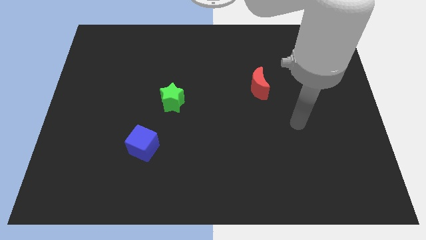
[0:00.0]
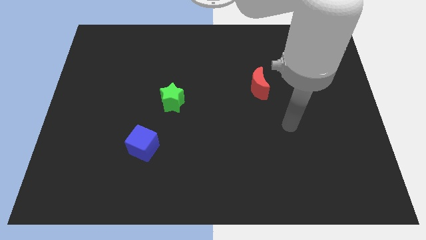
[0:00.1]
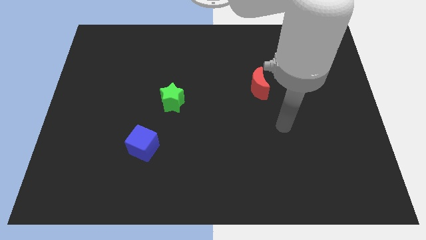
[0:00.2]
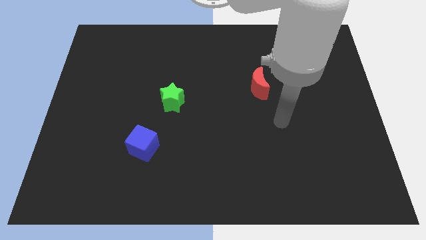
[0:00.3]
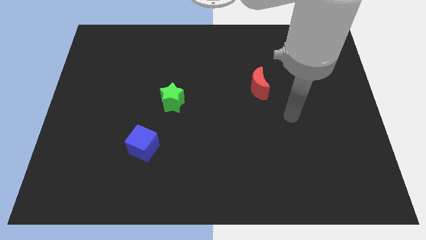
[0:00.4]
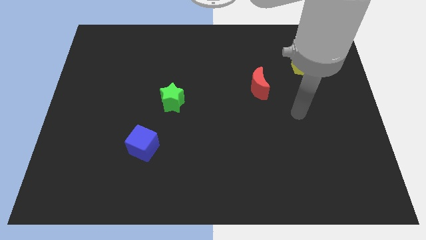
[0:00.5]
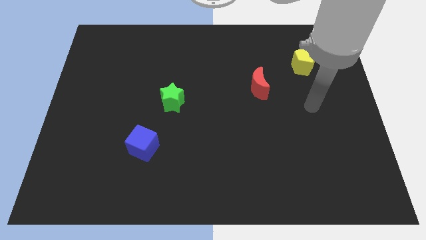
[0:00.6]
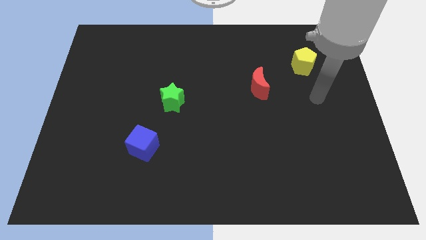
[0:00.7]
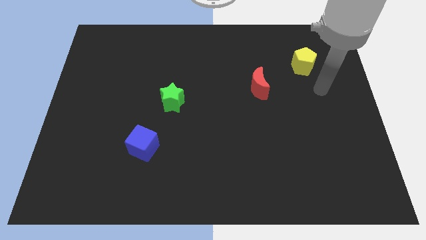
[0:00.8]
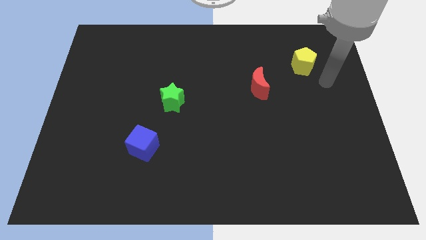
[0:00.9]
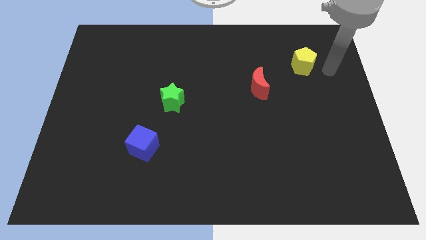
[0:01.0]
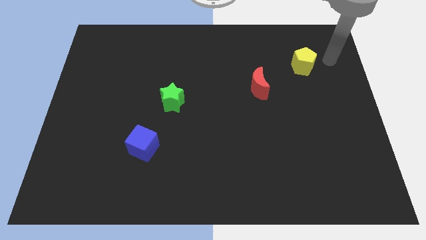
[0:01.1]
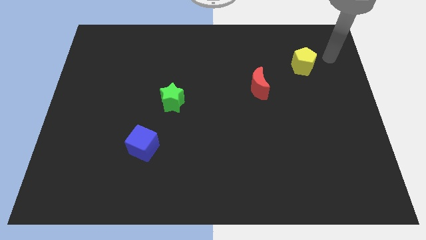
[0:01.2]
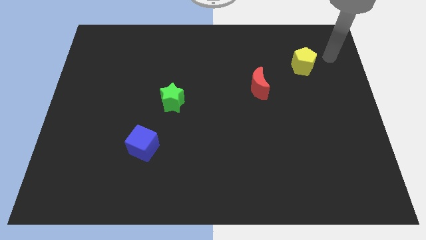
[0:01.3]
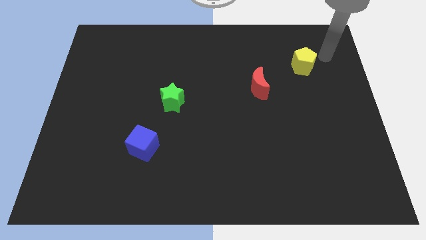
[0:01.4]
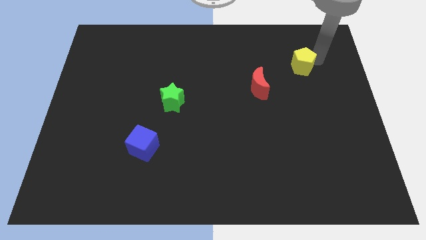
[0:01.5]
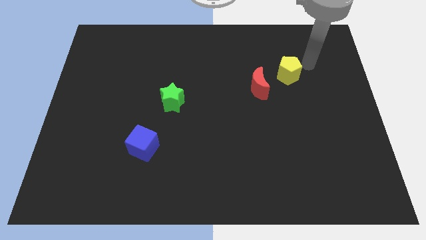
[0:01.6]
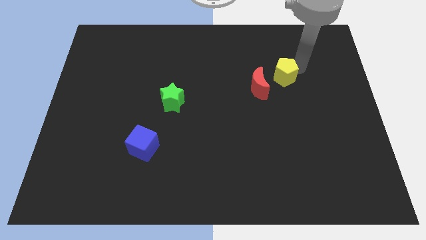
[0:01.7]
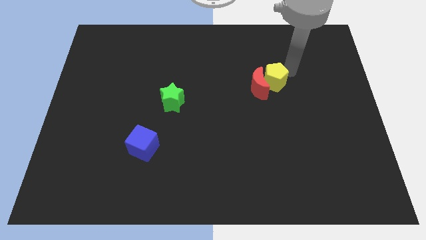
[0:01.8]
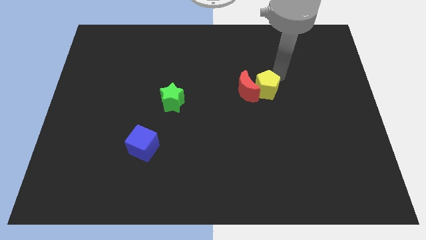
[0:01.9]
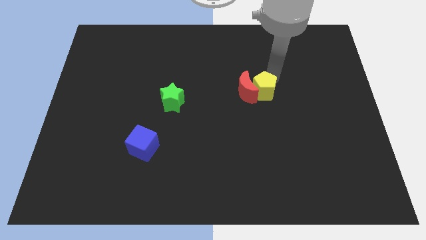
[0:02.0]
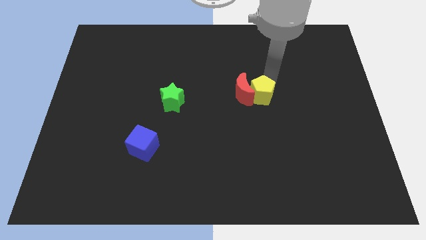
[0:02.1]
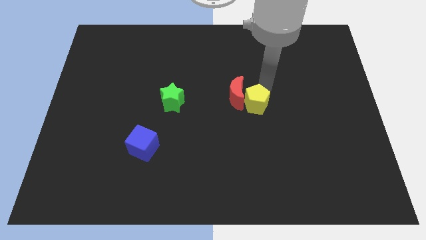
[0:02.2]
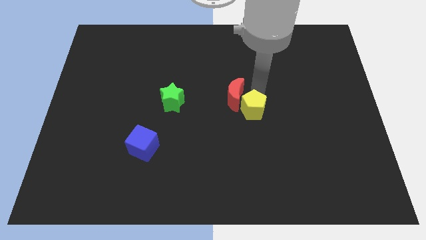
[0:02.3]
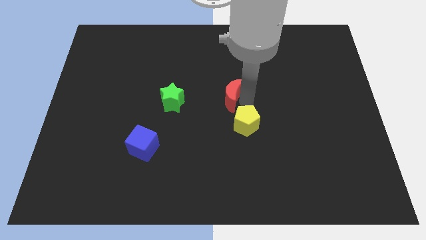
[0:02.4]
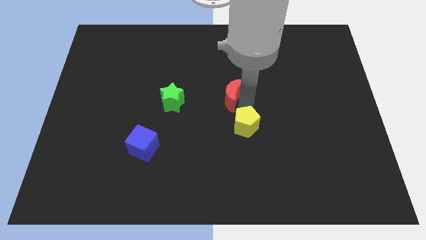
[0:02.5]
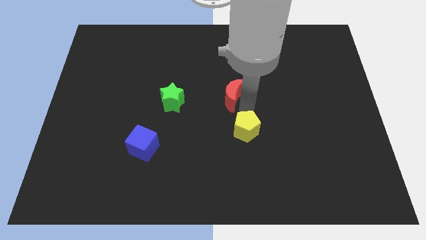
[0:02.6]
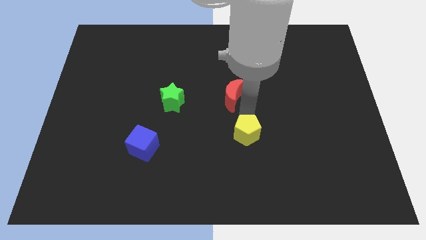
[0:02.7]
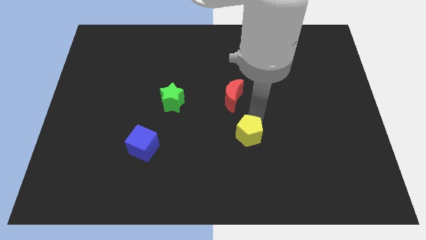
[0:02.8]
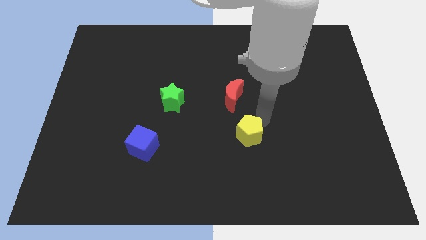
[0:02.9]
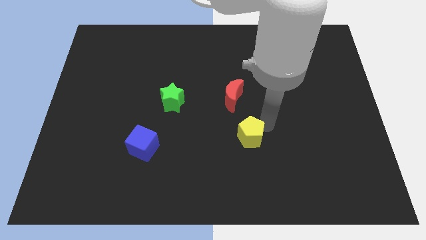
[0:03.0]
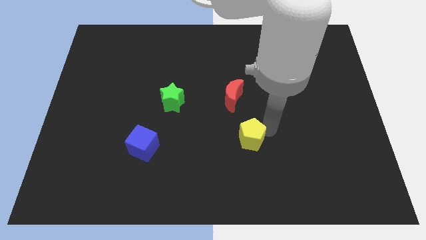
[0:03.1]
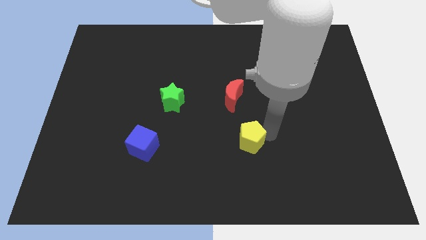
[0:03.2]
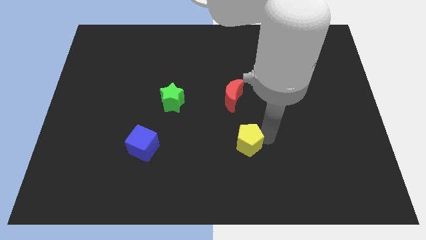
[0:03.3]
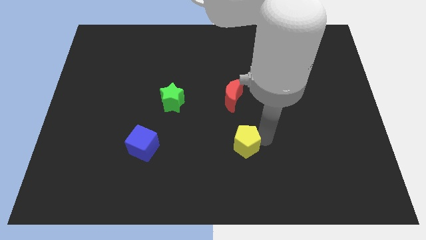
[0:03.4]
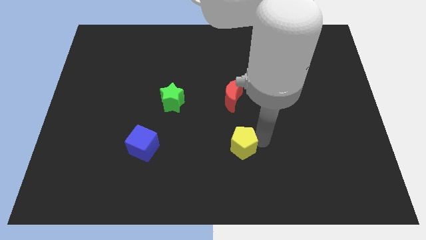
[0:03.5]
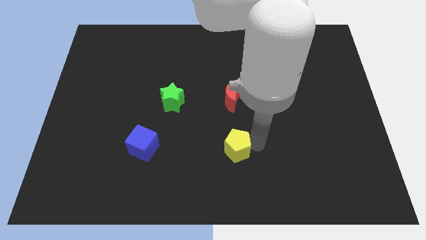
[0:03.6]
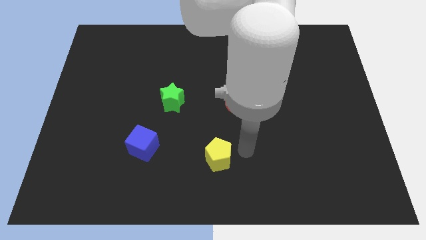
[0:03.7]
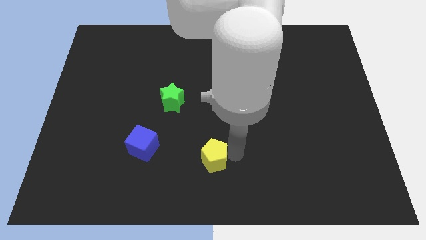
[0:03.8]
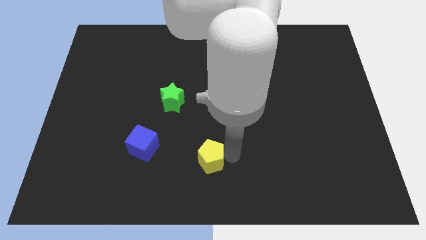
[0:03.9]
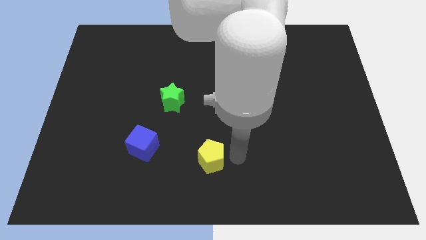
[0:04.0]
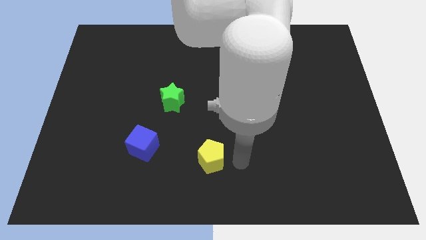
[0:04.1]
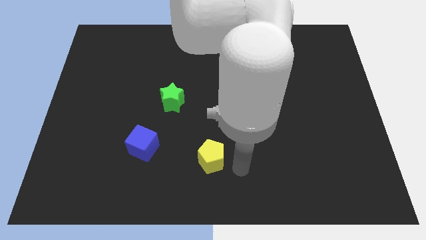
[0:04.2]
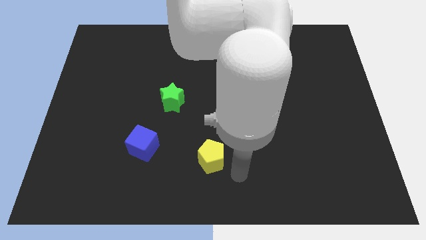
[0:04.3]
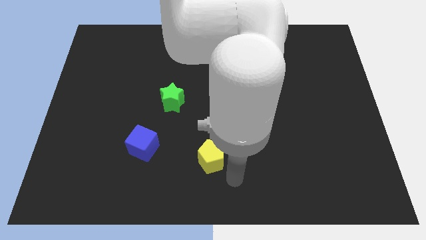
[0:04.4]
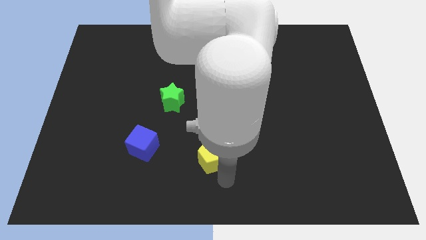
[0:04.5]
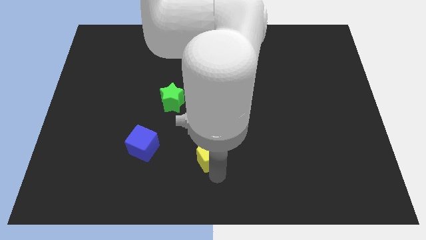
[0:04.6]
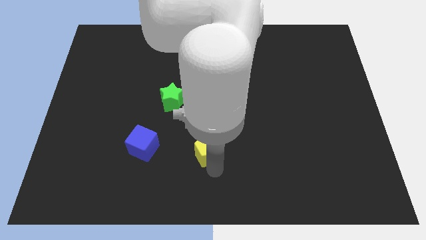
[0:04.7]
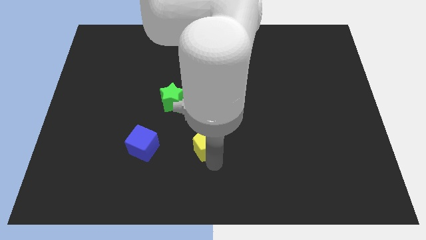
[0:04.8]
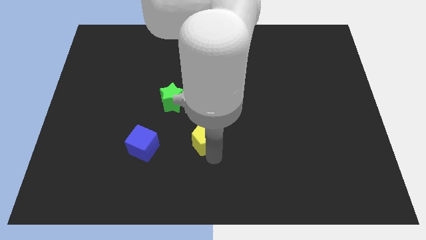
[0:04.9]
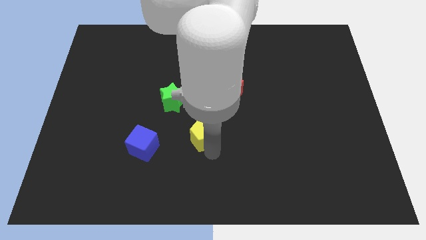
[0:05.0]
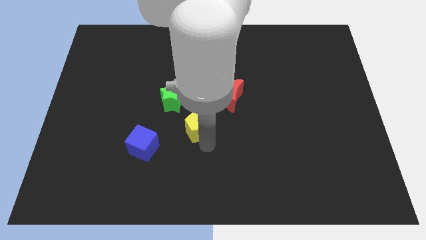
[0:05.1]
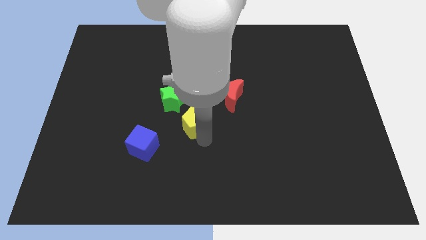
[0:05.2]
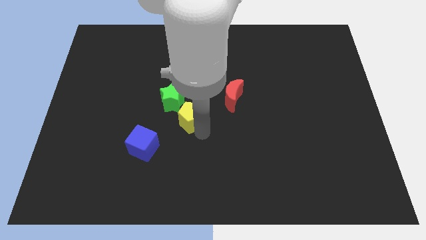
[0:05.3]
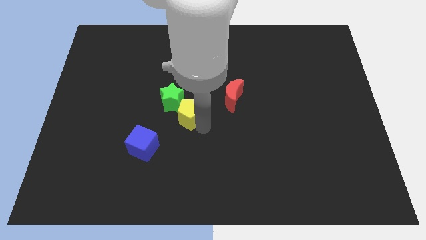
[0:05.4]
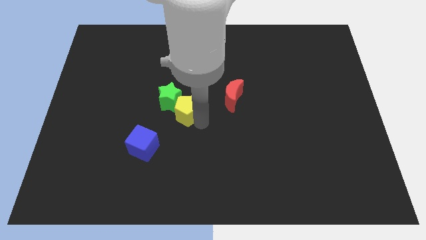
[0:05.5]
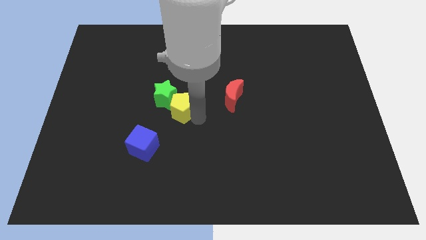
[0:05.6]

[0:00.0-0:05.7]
move the yellow block to the green block

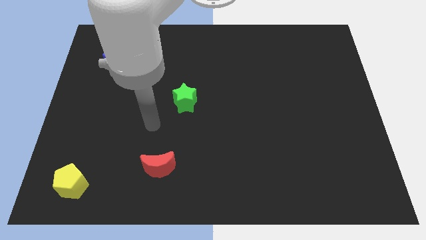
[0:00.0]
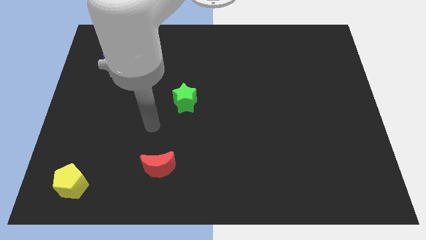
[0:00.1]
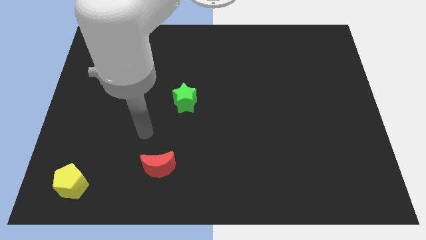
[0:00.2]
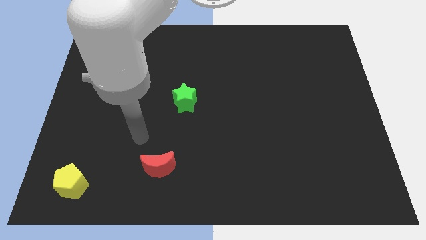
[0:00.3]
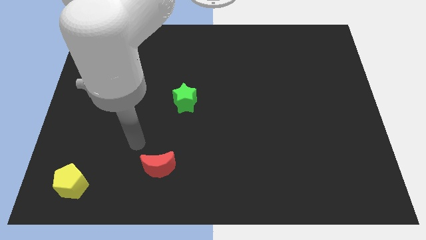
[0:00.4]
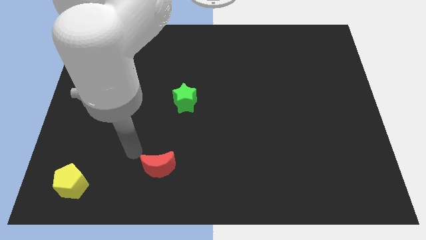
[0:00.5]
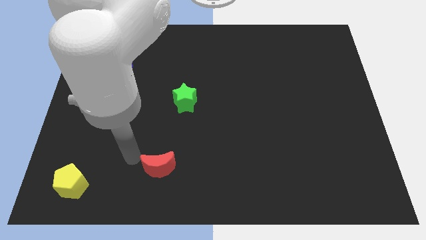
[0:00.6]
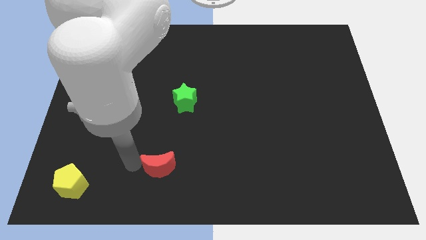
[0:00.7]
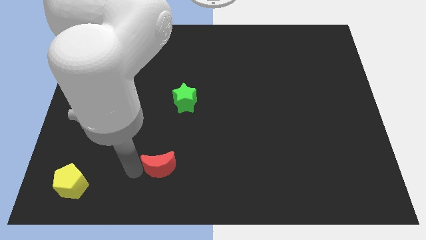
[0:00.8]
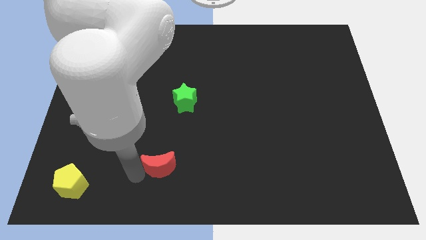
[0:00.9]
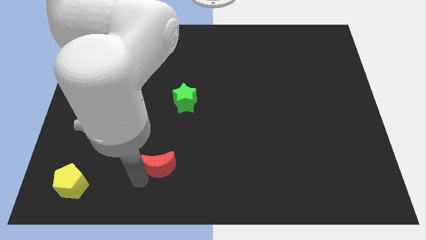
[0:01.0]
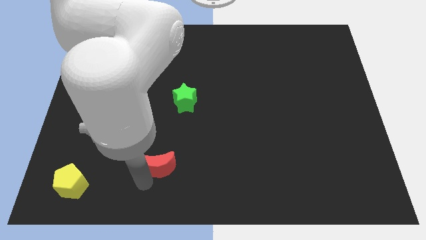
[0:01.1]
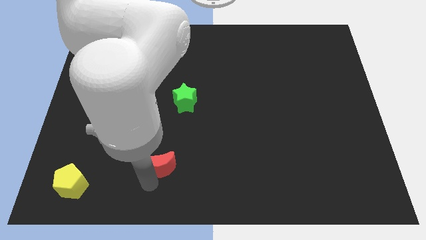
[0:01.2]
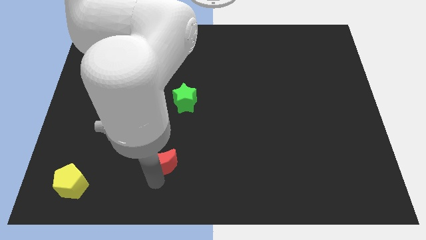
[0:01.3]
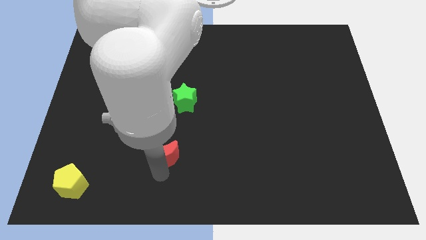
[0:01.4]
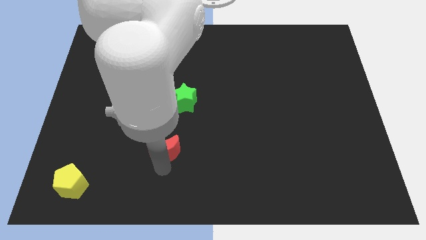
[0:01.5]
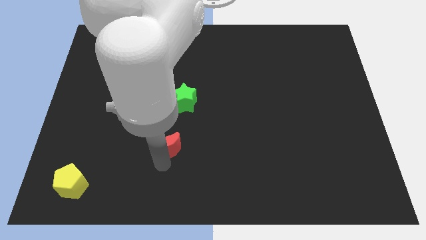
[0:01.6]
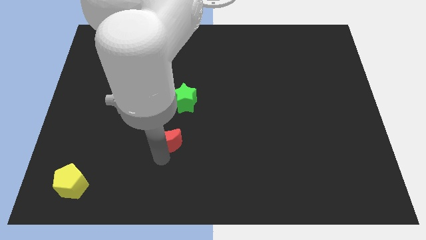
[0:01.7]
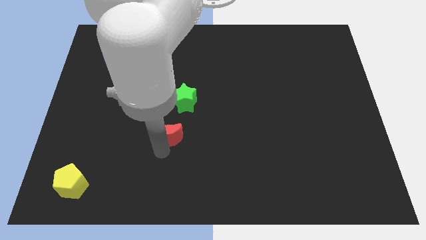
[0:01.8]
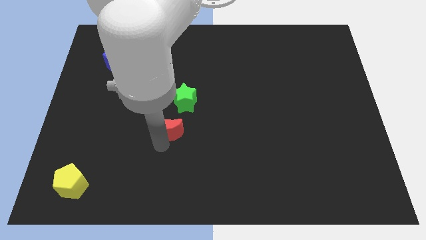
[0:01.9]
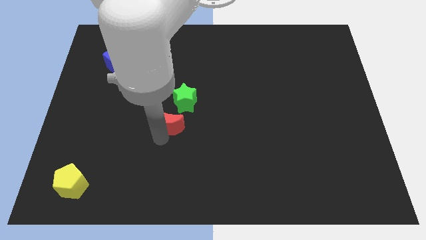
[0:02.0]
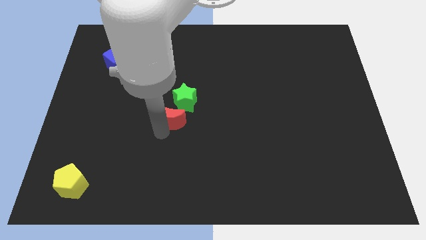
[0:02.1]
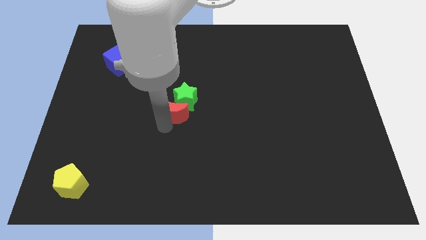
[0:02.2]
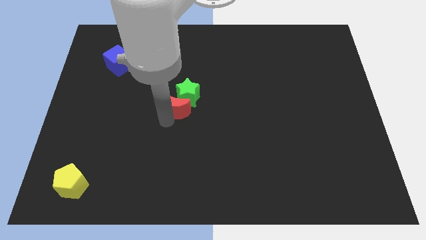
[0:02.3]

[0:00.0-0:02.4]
put the red moon next to the green block

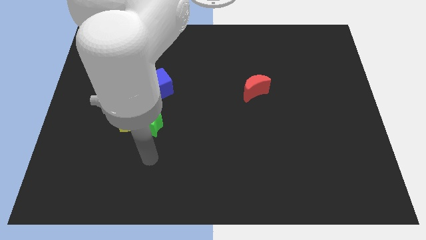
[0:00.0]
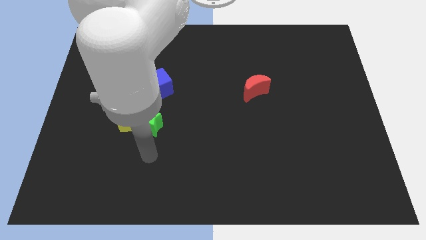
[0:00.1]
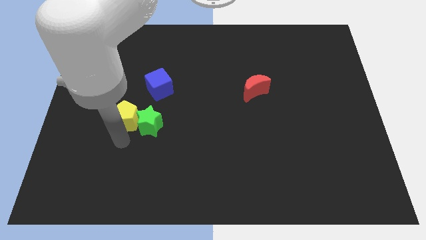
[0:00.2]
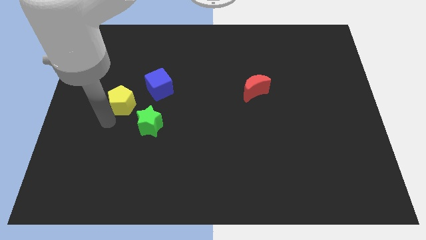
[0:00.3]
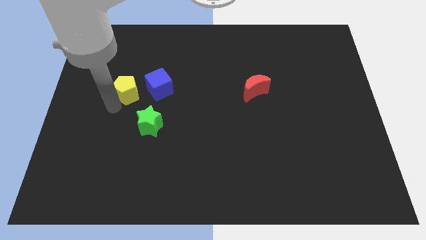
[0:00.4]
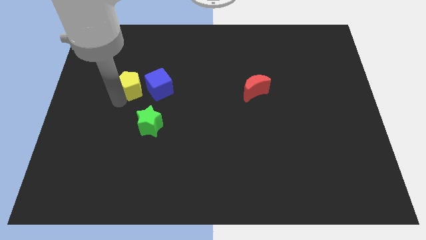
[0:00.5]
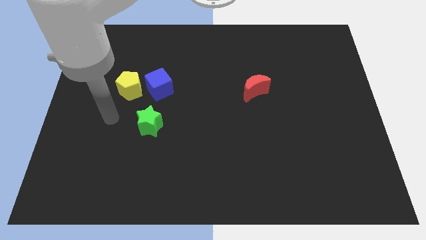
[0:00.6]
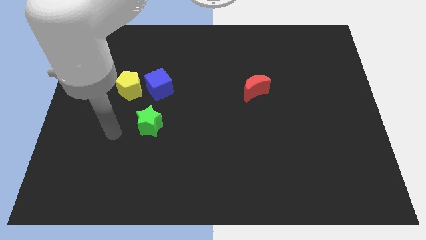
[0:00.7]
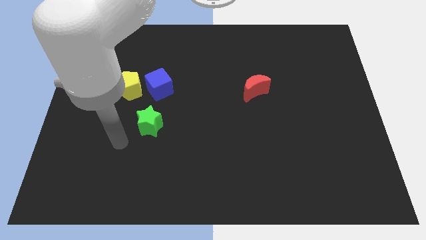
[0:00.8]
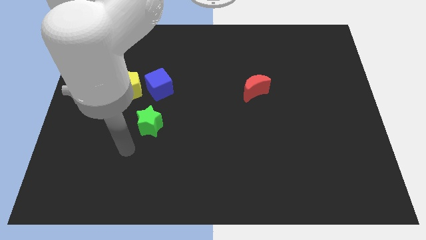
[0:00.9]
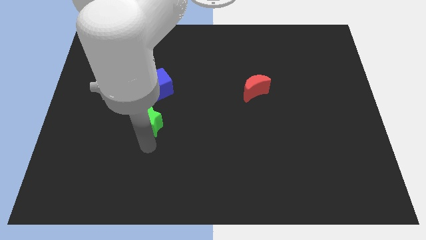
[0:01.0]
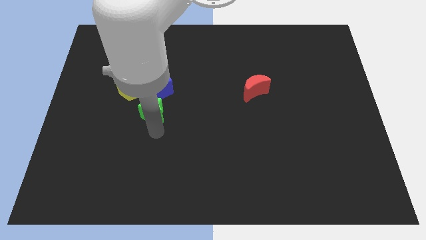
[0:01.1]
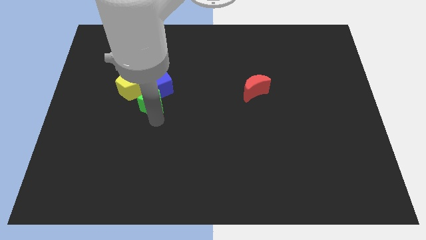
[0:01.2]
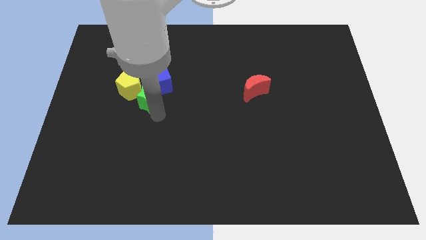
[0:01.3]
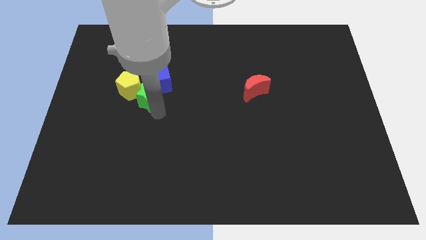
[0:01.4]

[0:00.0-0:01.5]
slide the green block to the blue cube
